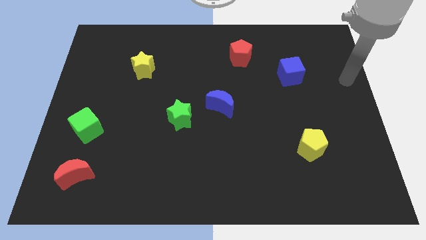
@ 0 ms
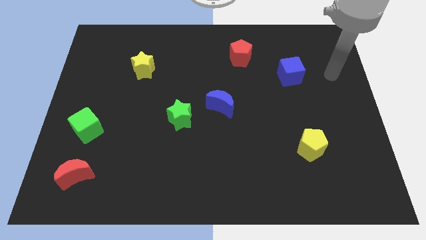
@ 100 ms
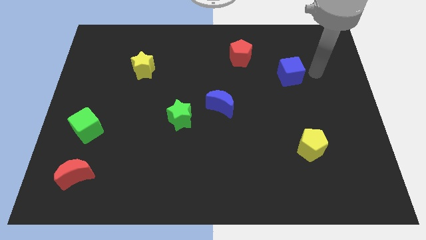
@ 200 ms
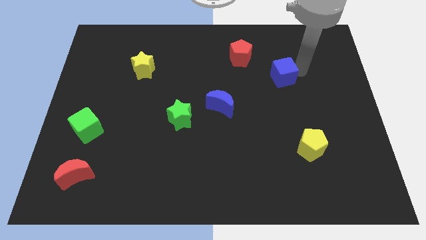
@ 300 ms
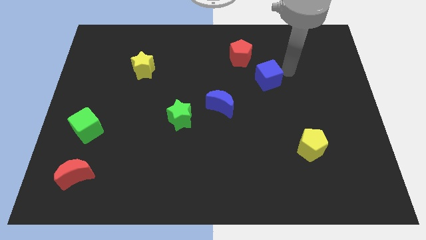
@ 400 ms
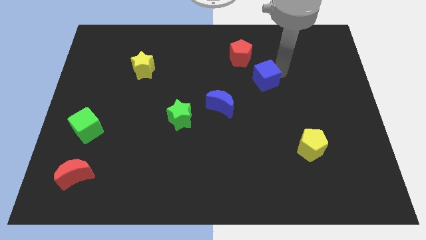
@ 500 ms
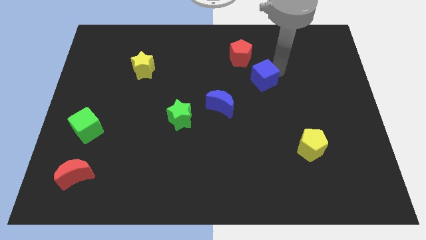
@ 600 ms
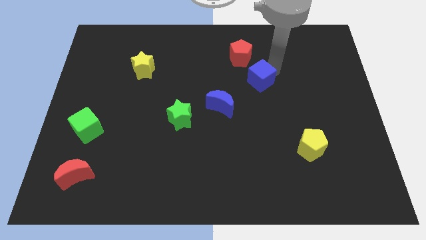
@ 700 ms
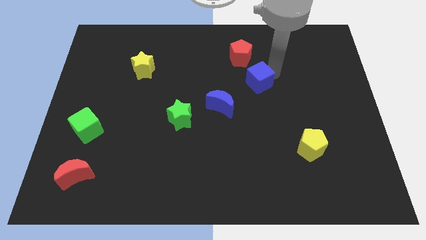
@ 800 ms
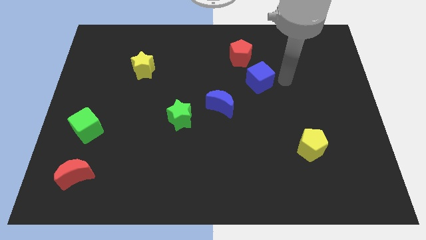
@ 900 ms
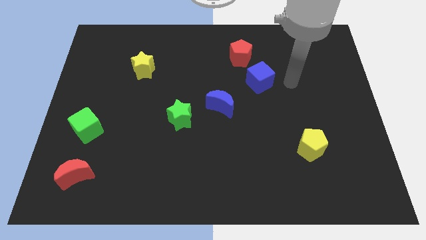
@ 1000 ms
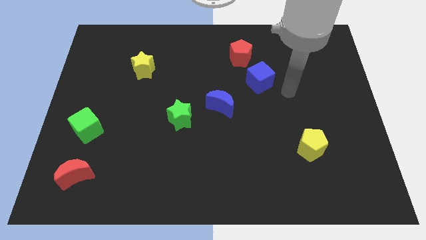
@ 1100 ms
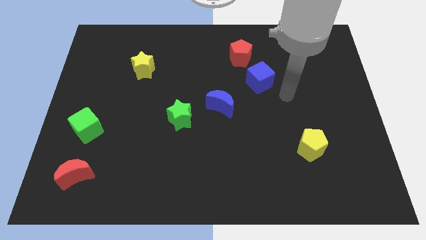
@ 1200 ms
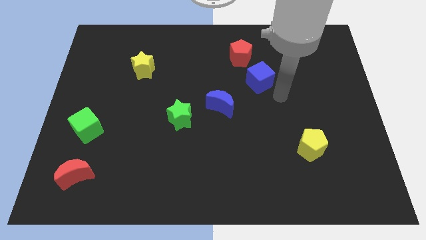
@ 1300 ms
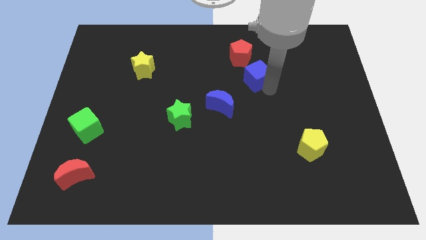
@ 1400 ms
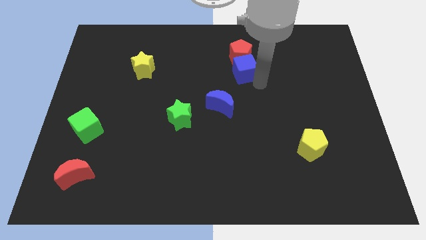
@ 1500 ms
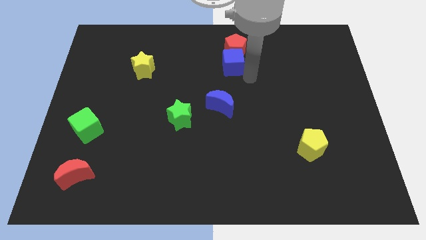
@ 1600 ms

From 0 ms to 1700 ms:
place the blue cube below the red pentagon

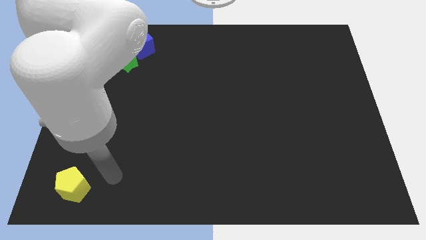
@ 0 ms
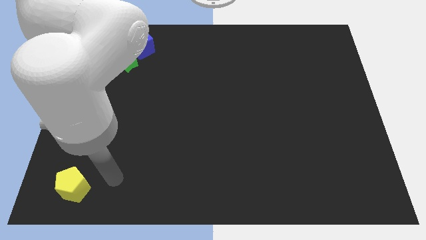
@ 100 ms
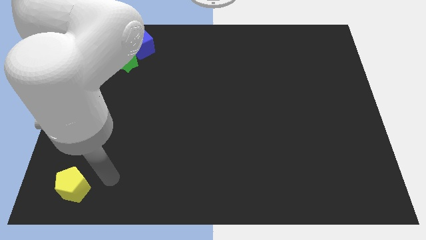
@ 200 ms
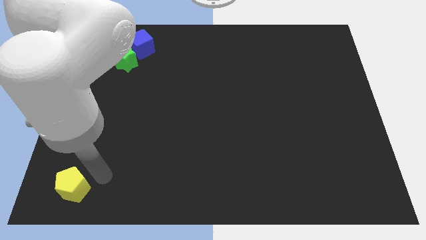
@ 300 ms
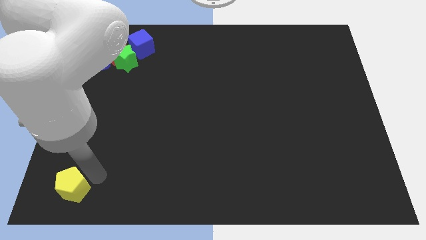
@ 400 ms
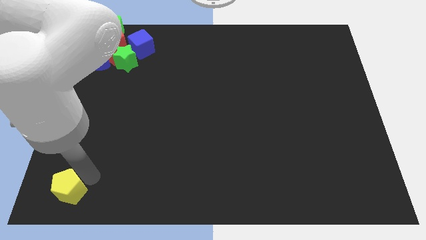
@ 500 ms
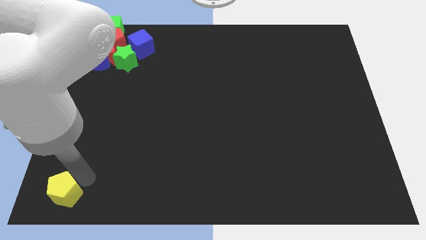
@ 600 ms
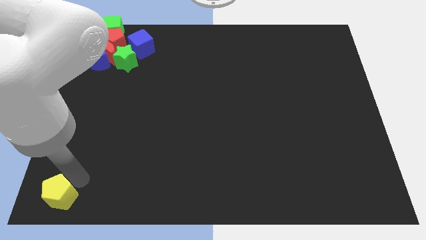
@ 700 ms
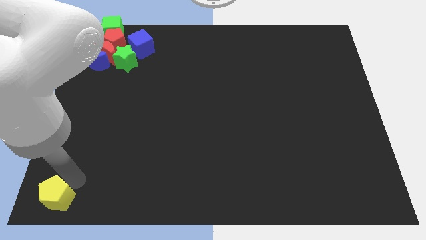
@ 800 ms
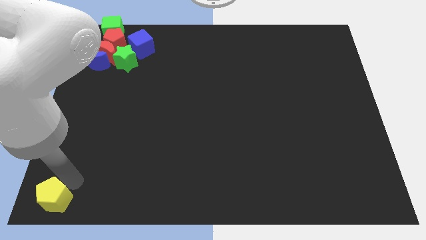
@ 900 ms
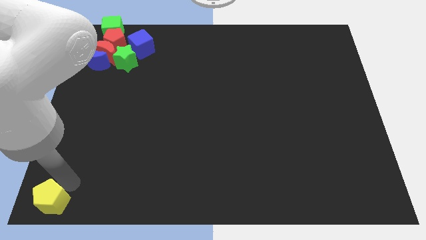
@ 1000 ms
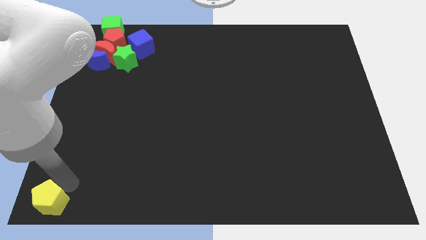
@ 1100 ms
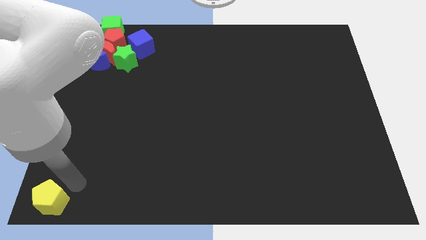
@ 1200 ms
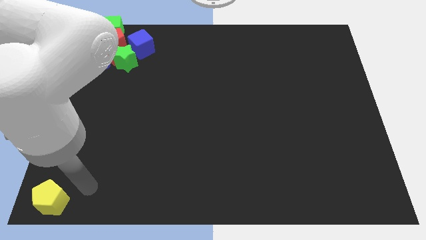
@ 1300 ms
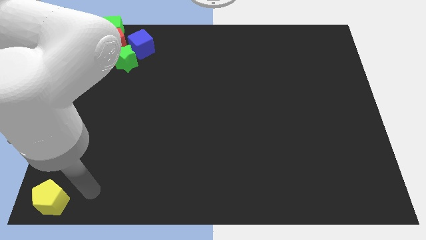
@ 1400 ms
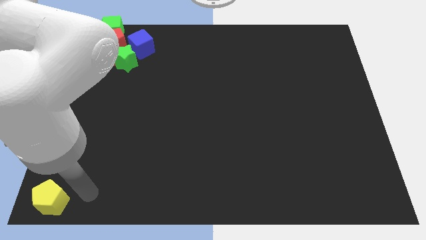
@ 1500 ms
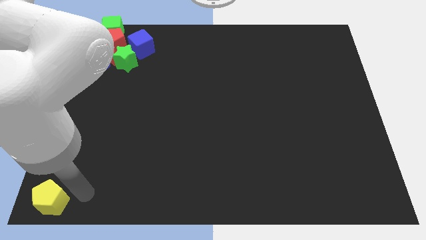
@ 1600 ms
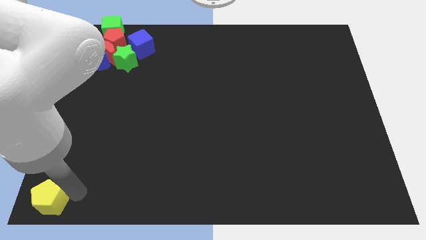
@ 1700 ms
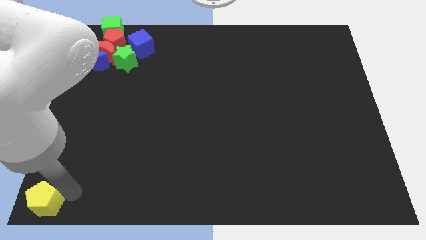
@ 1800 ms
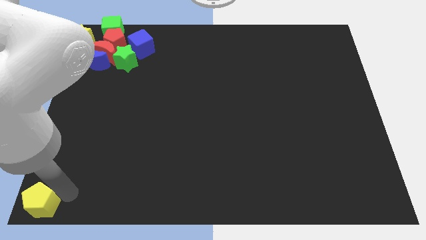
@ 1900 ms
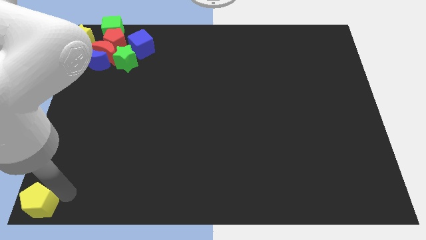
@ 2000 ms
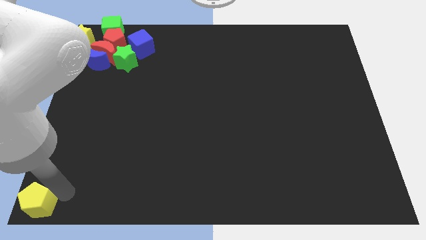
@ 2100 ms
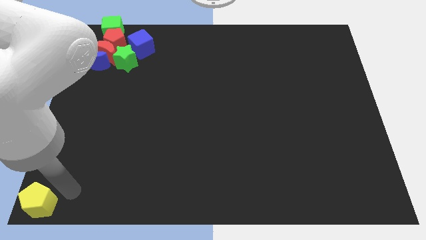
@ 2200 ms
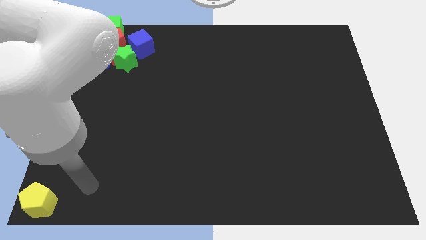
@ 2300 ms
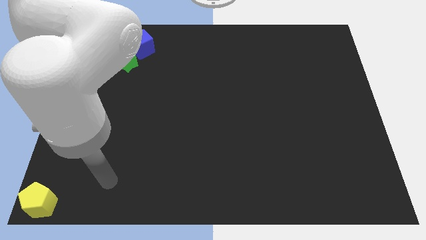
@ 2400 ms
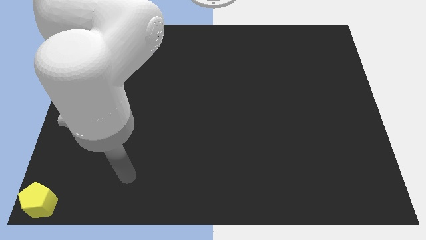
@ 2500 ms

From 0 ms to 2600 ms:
push the yellow pentagon towards the bottom left corner of the board

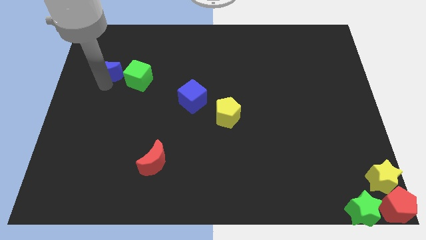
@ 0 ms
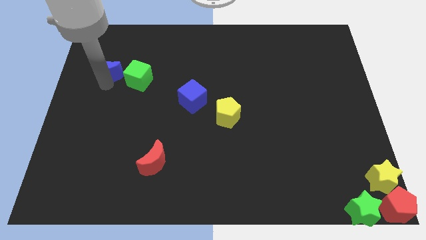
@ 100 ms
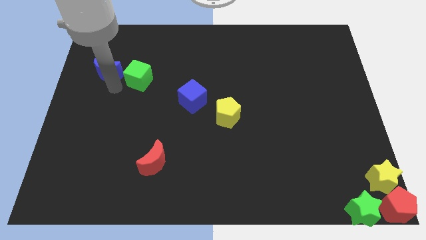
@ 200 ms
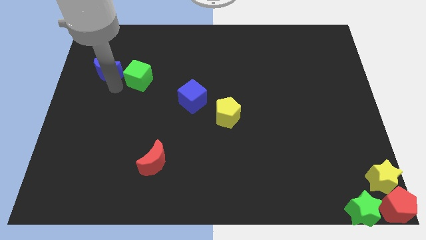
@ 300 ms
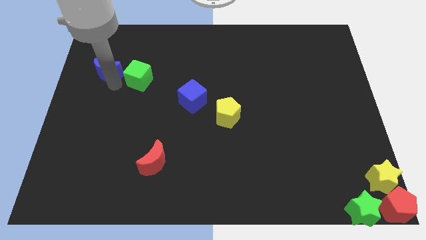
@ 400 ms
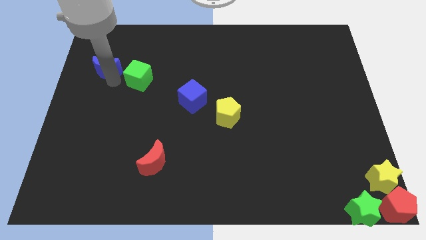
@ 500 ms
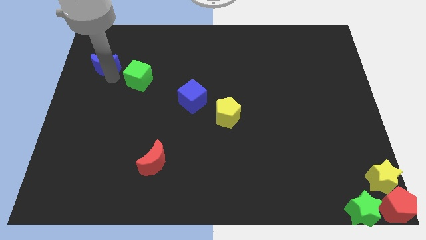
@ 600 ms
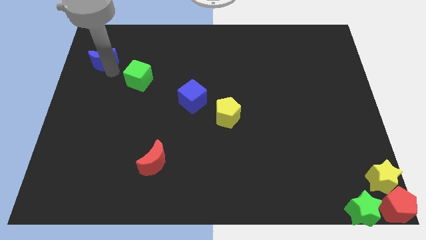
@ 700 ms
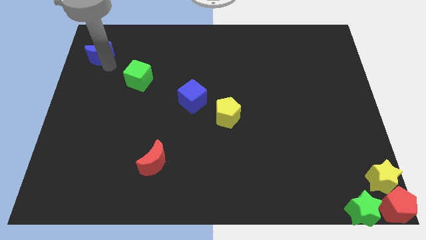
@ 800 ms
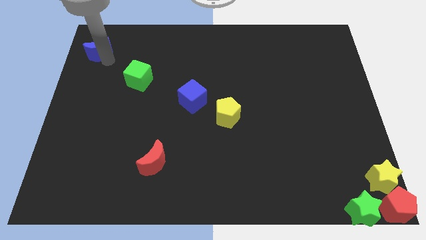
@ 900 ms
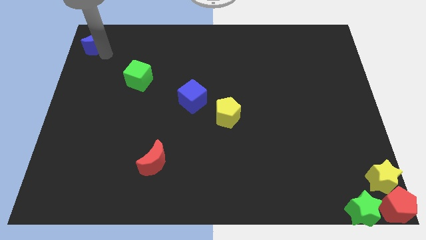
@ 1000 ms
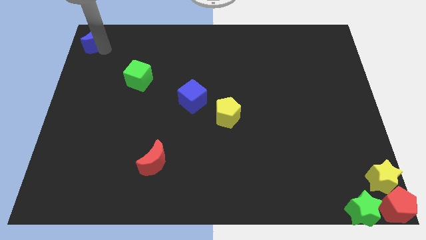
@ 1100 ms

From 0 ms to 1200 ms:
push the blue crescent to the top left

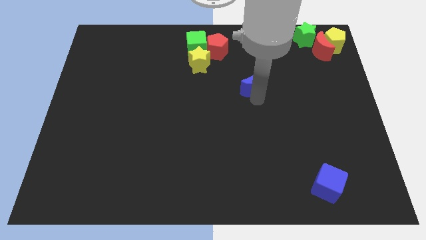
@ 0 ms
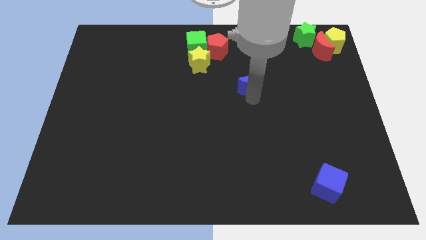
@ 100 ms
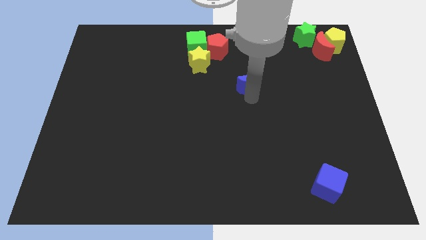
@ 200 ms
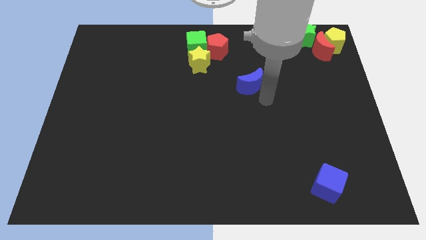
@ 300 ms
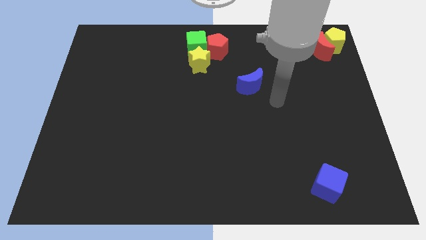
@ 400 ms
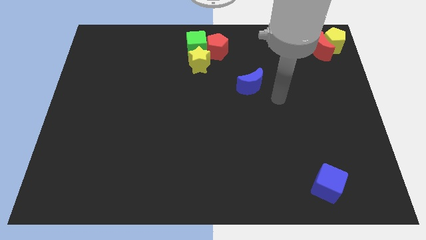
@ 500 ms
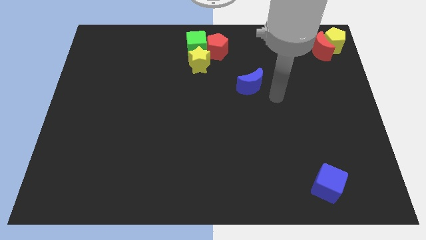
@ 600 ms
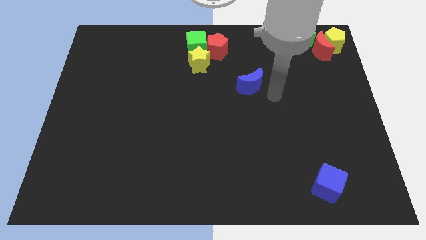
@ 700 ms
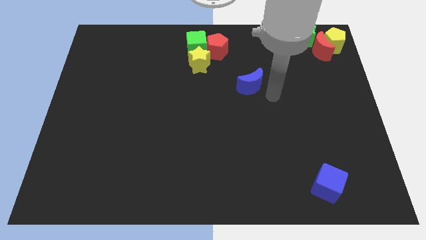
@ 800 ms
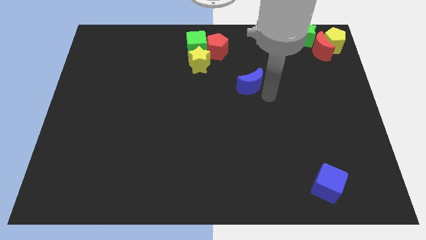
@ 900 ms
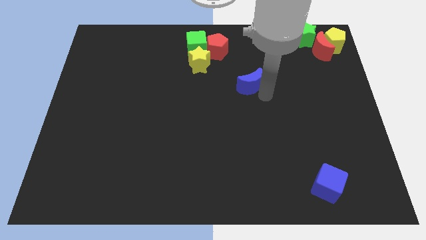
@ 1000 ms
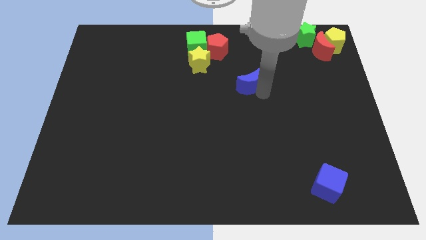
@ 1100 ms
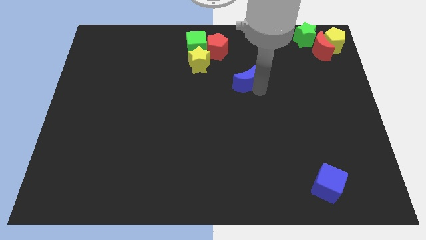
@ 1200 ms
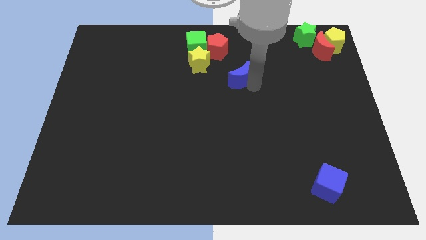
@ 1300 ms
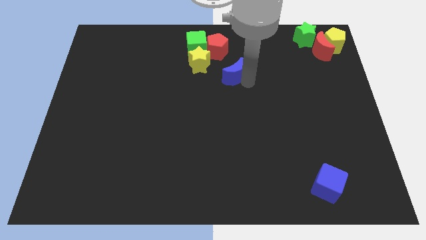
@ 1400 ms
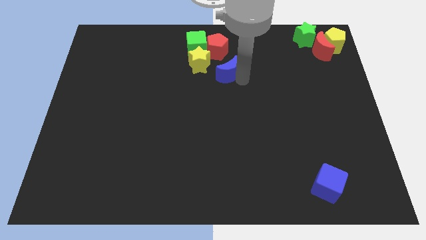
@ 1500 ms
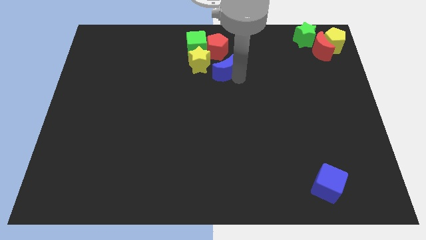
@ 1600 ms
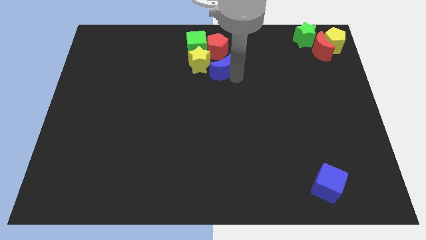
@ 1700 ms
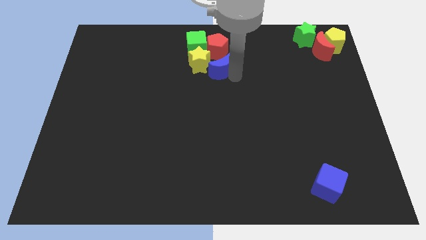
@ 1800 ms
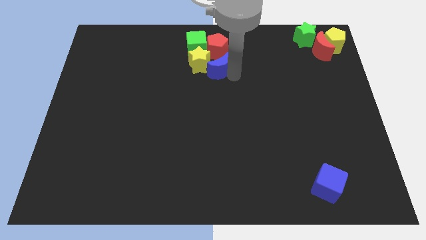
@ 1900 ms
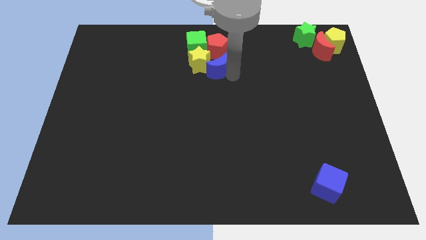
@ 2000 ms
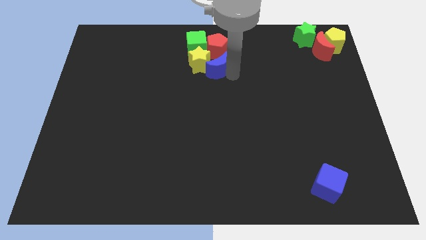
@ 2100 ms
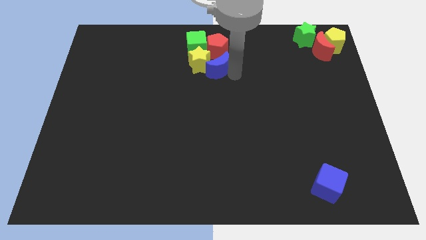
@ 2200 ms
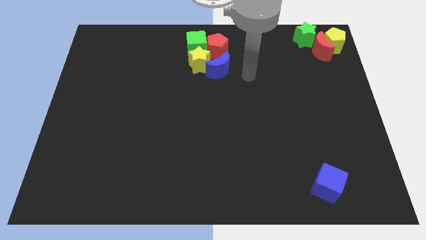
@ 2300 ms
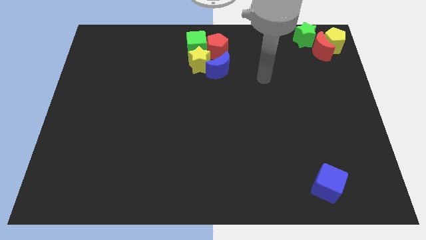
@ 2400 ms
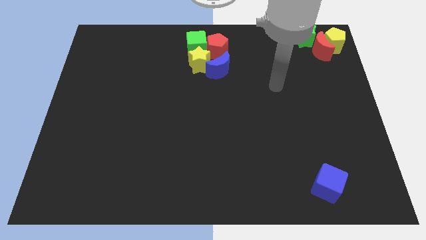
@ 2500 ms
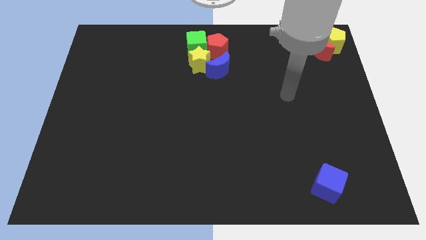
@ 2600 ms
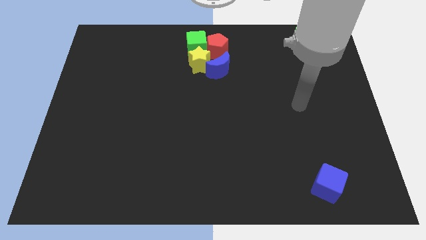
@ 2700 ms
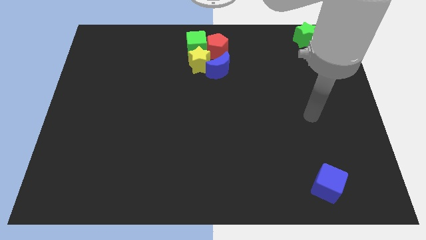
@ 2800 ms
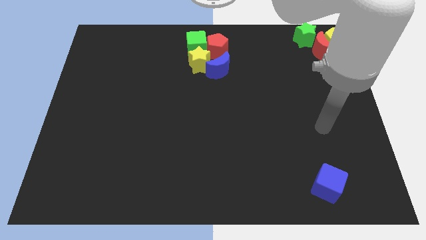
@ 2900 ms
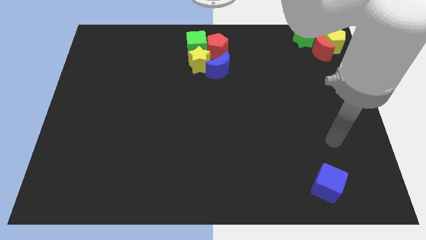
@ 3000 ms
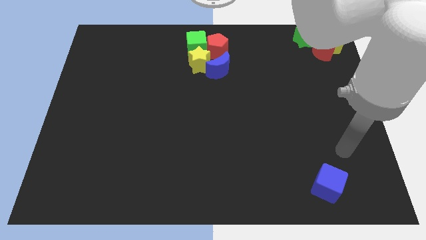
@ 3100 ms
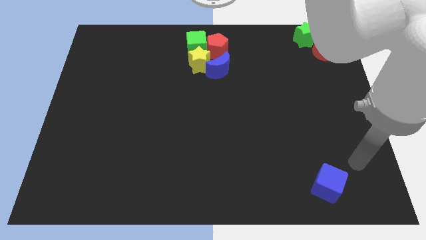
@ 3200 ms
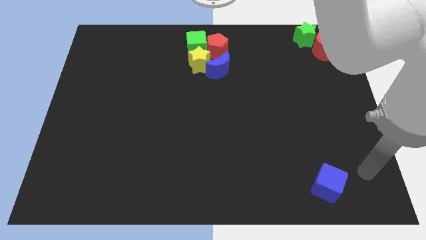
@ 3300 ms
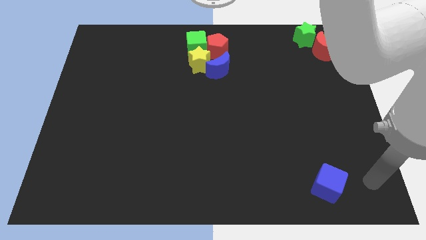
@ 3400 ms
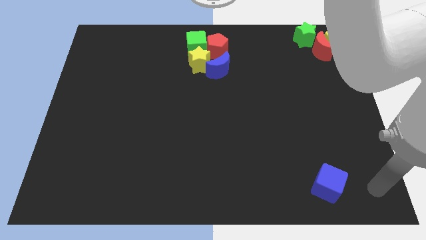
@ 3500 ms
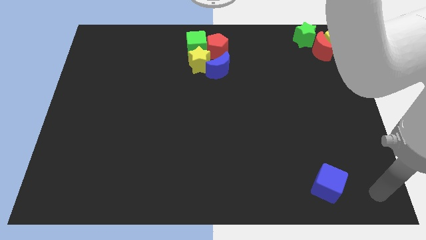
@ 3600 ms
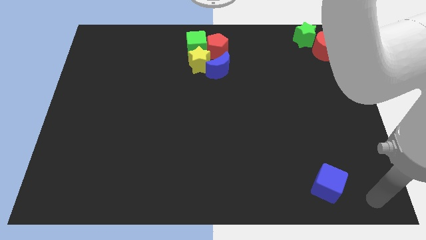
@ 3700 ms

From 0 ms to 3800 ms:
add the blue moon to the group of blocks at the top center of the board
